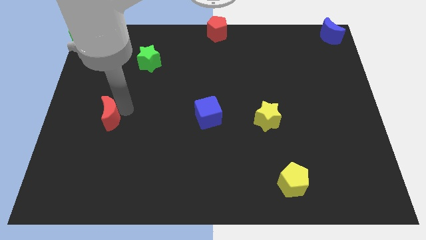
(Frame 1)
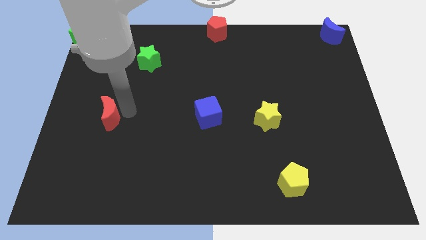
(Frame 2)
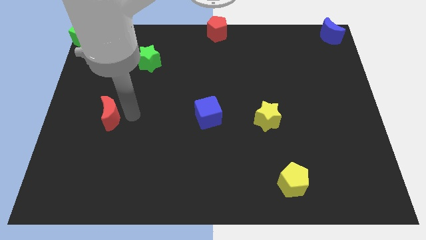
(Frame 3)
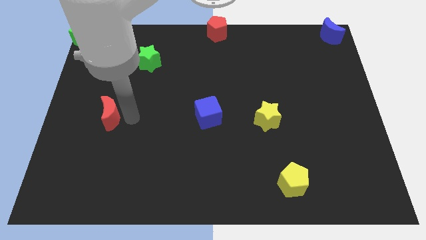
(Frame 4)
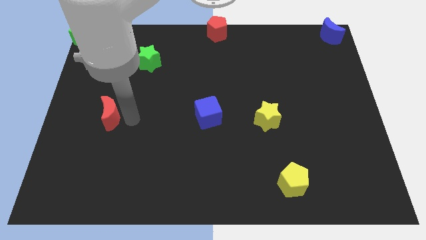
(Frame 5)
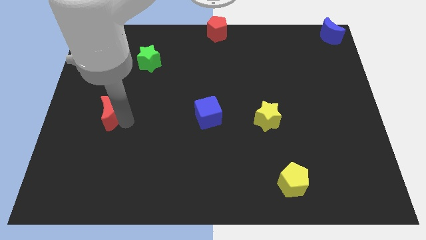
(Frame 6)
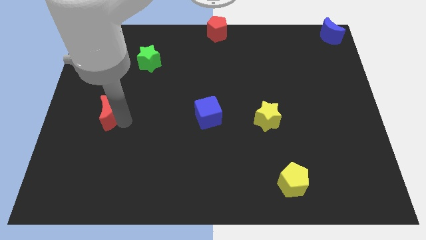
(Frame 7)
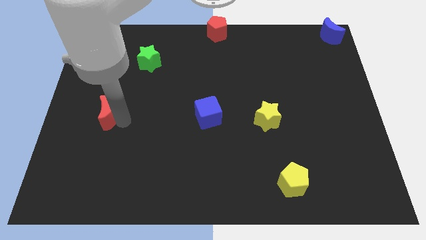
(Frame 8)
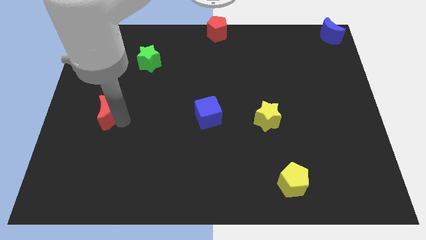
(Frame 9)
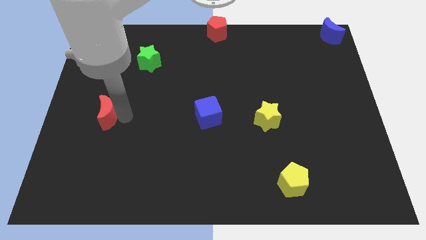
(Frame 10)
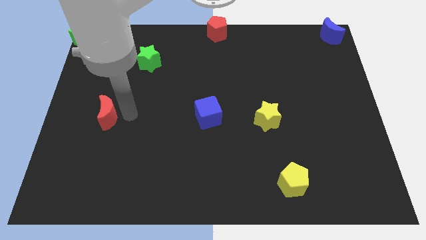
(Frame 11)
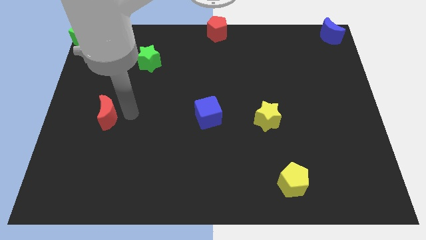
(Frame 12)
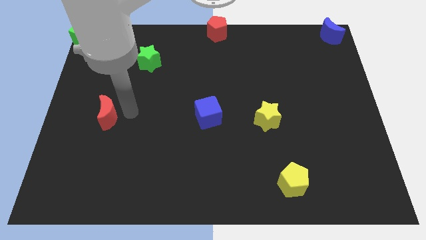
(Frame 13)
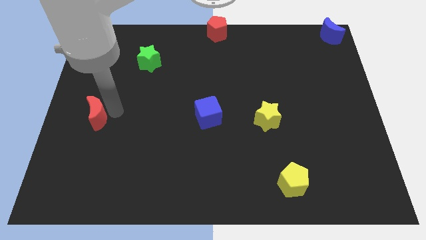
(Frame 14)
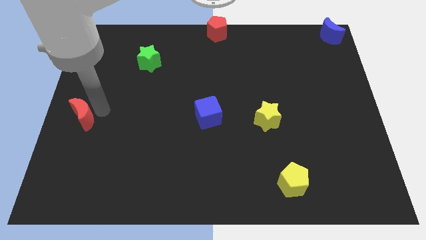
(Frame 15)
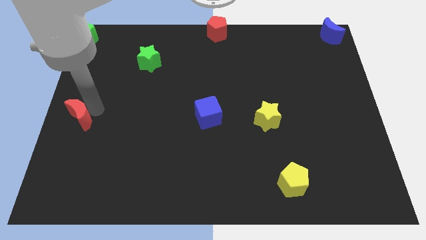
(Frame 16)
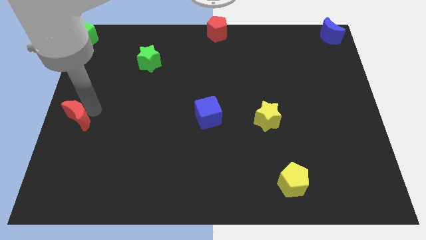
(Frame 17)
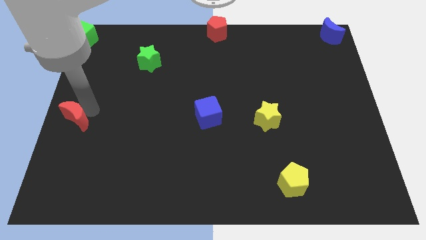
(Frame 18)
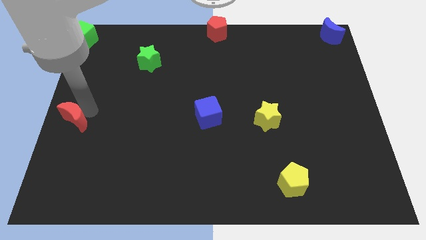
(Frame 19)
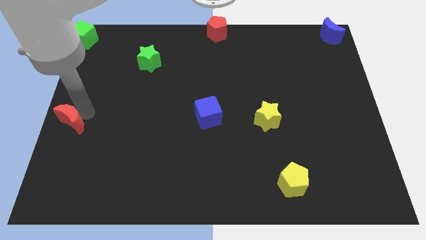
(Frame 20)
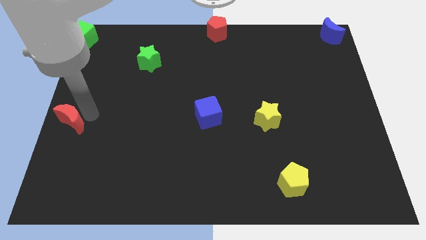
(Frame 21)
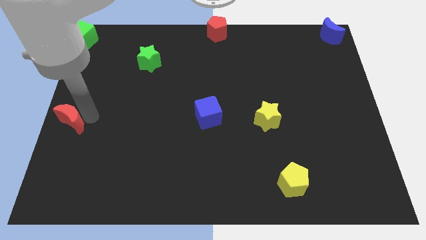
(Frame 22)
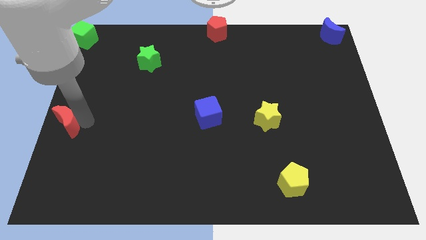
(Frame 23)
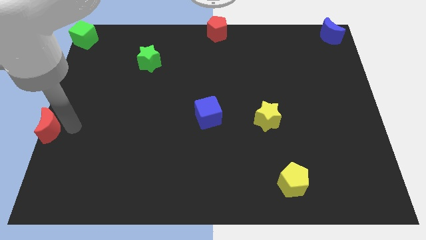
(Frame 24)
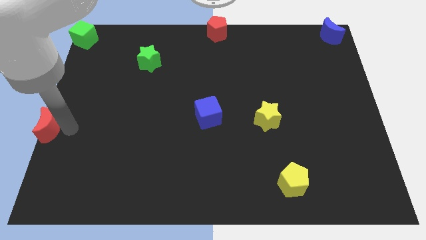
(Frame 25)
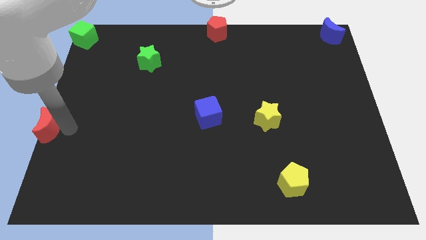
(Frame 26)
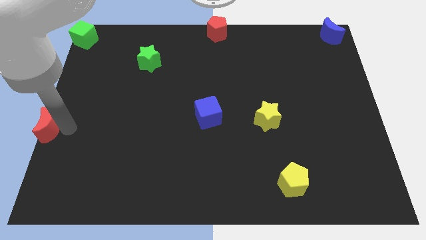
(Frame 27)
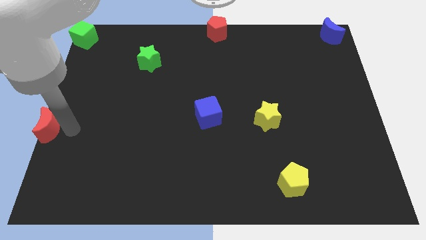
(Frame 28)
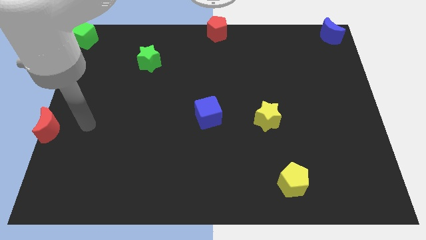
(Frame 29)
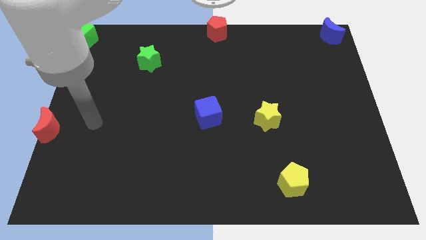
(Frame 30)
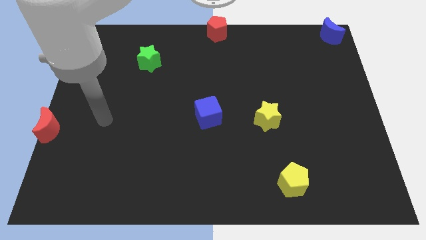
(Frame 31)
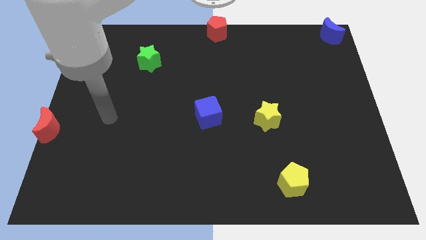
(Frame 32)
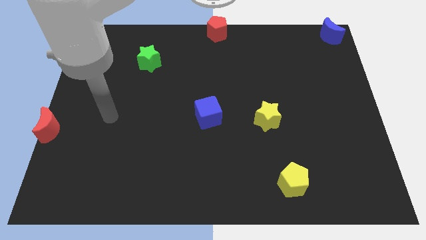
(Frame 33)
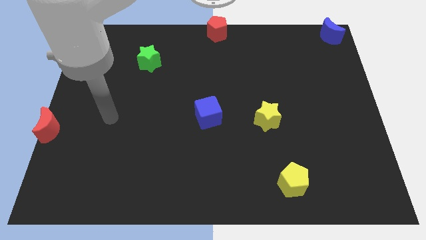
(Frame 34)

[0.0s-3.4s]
move red moon to the left center

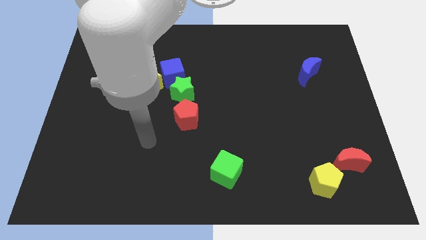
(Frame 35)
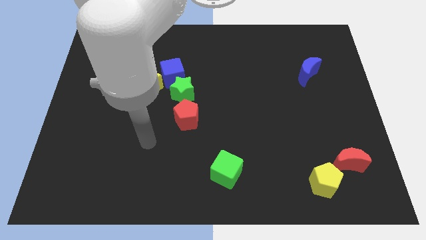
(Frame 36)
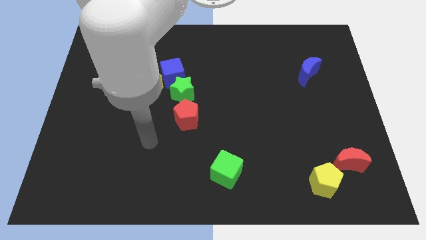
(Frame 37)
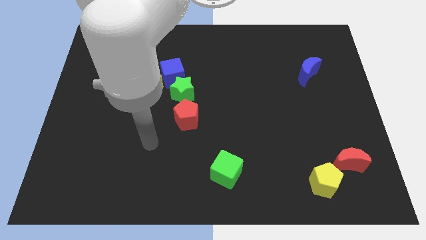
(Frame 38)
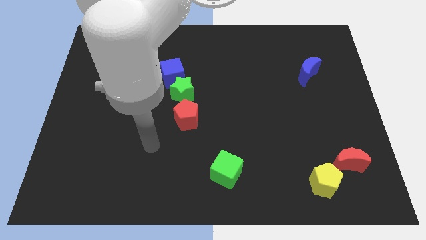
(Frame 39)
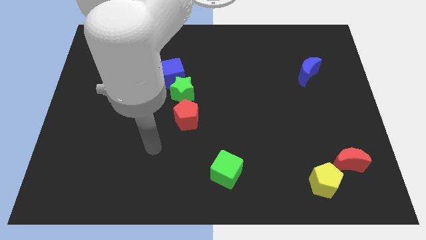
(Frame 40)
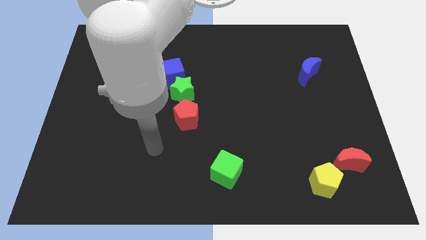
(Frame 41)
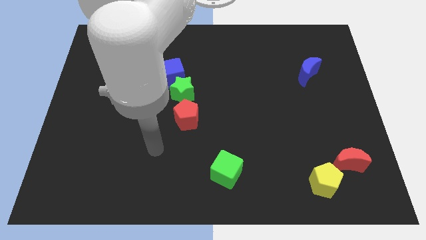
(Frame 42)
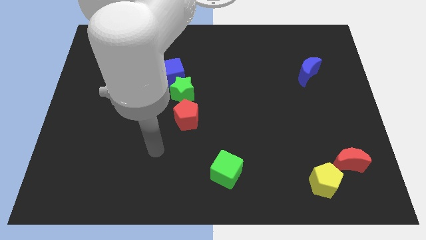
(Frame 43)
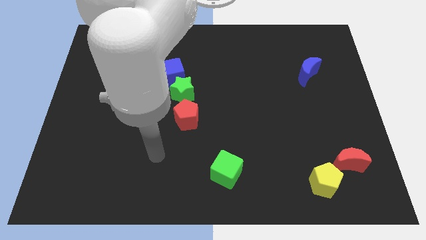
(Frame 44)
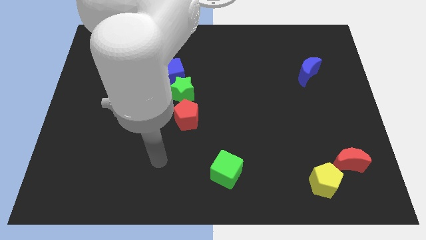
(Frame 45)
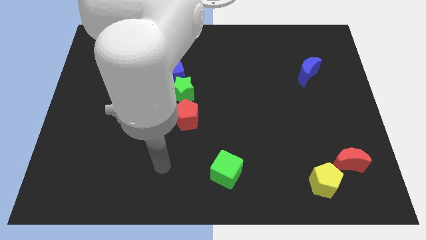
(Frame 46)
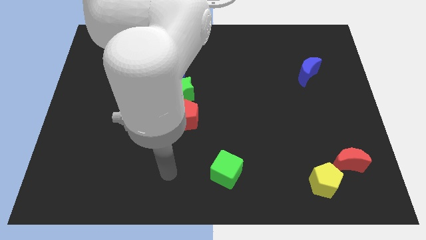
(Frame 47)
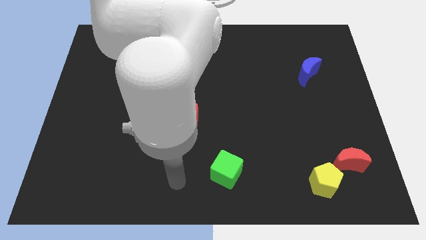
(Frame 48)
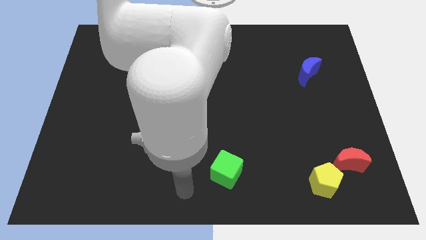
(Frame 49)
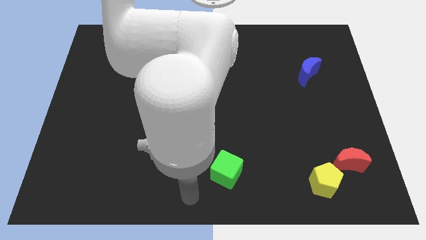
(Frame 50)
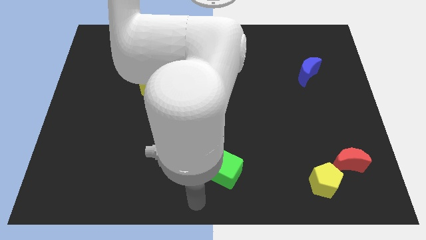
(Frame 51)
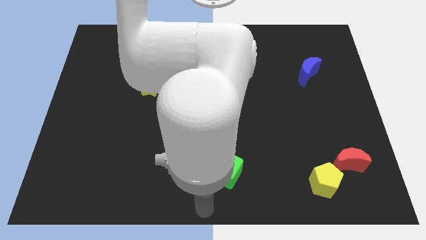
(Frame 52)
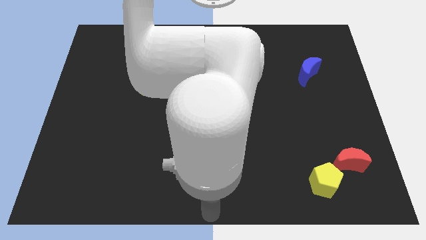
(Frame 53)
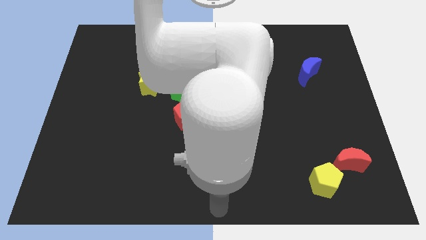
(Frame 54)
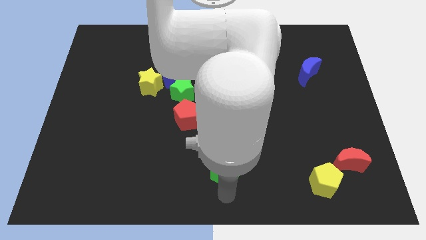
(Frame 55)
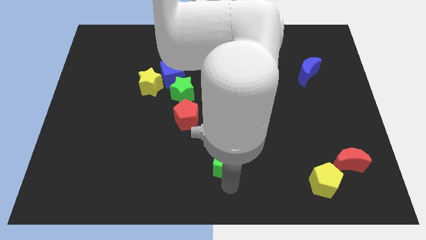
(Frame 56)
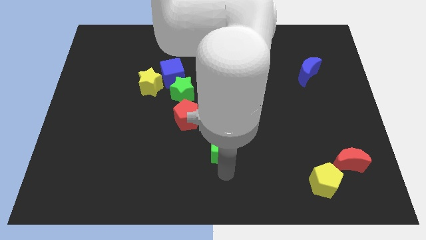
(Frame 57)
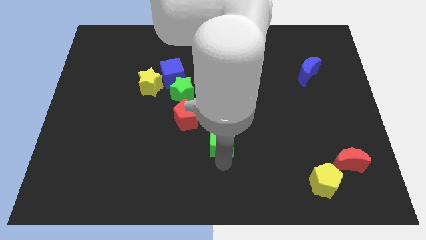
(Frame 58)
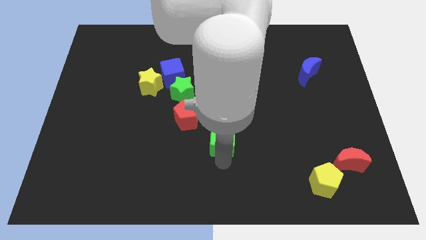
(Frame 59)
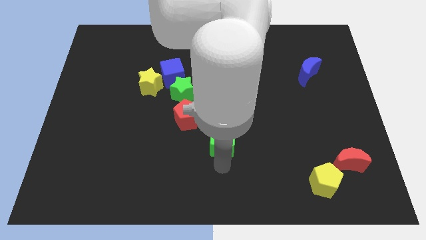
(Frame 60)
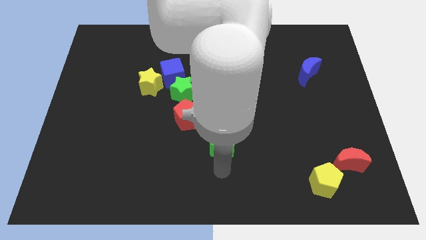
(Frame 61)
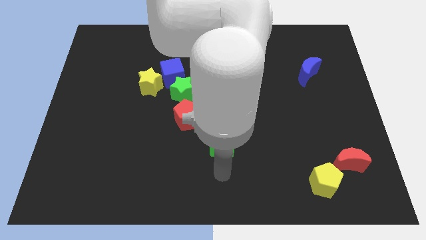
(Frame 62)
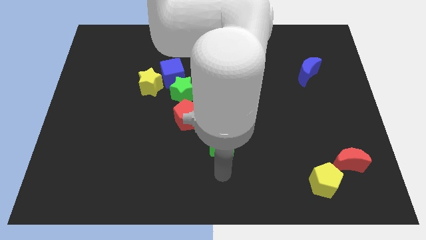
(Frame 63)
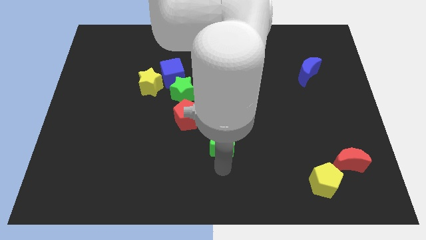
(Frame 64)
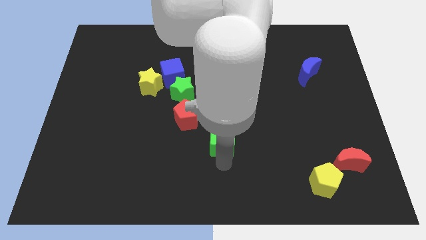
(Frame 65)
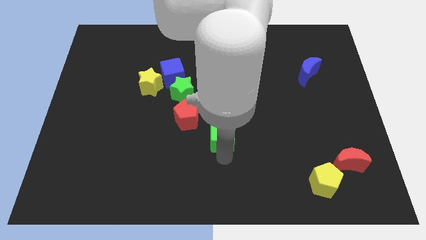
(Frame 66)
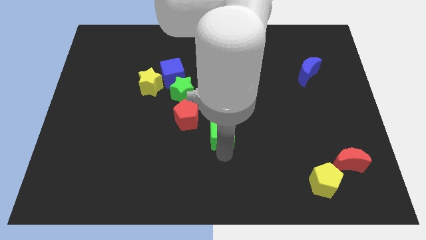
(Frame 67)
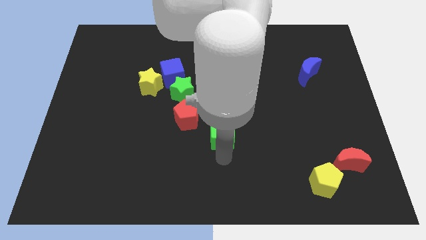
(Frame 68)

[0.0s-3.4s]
move the green cube in between the red pentagon and yellow pentagon

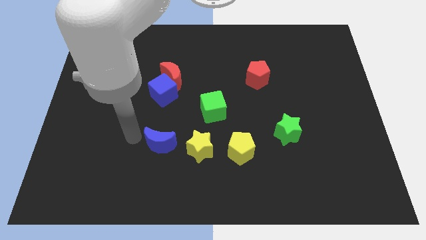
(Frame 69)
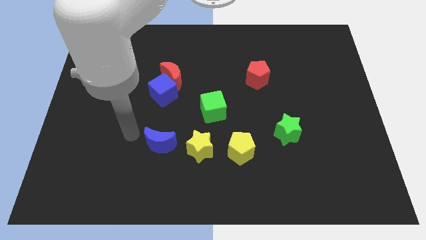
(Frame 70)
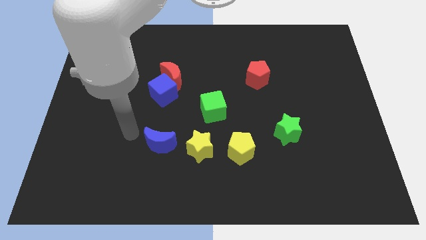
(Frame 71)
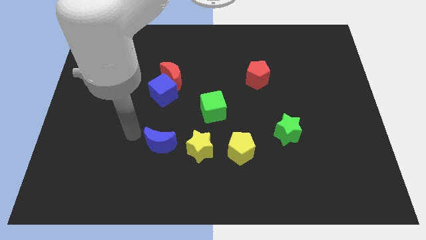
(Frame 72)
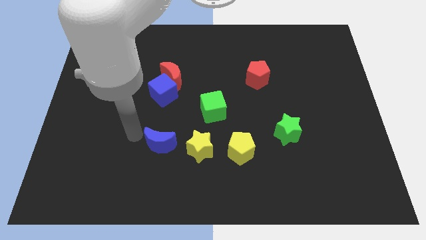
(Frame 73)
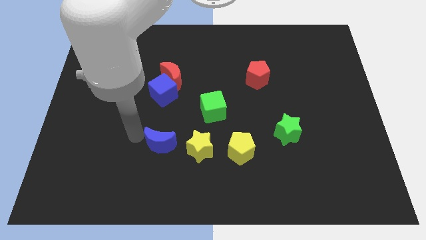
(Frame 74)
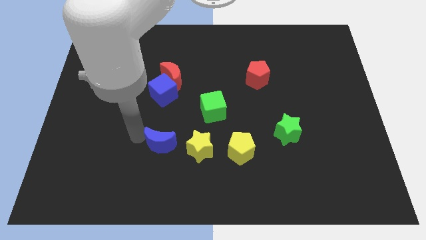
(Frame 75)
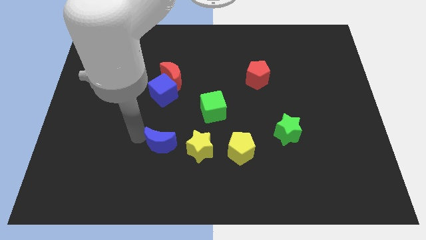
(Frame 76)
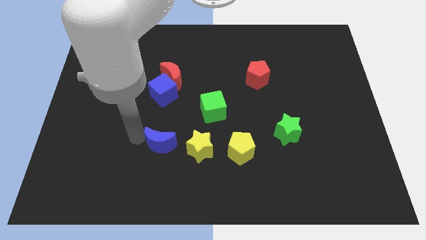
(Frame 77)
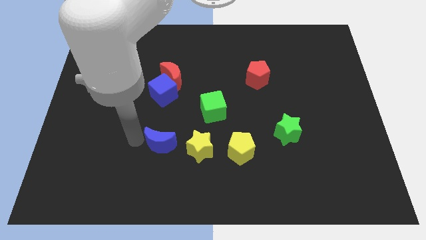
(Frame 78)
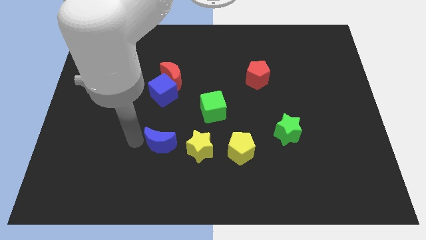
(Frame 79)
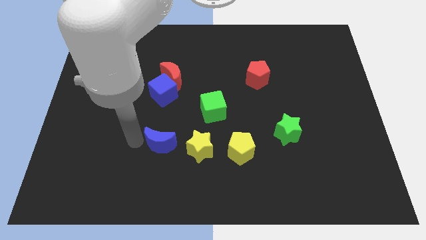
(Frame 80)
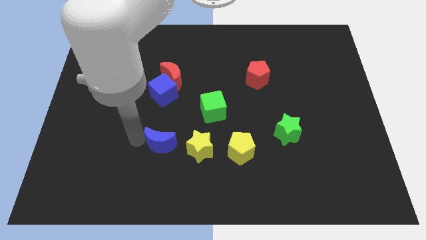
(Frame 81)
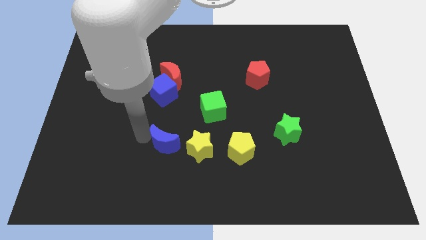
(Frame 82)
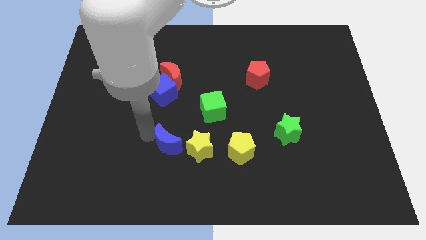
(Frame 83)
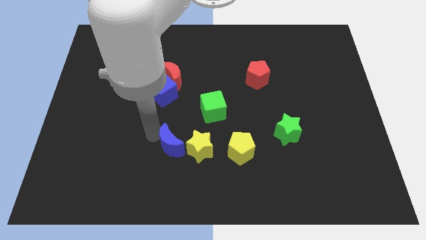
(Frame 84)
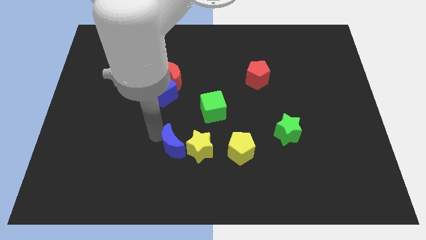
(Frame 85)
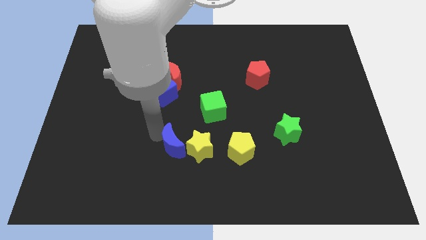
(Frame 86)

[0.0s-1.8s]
push the blue crescent into the yellow star

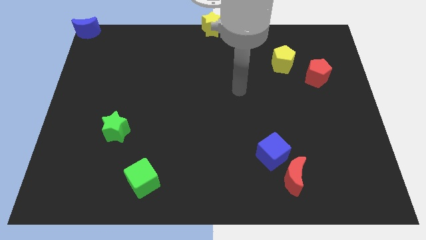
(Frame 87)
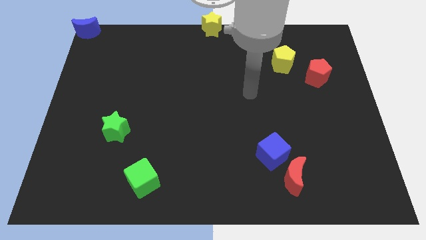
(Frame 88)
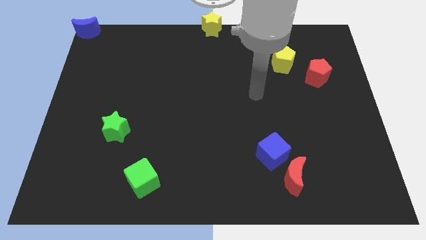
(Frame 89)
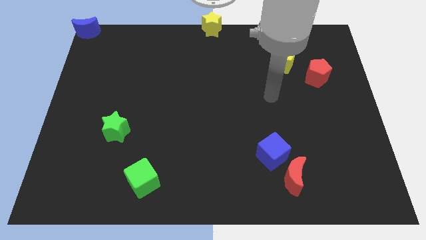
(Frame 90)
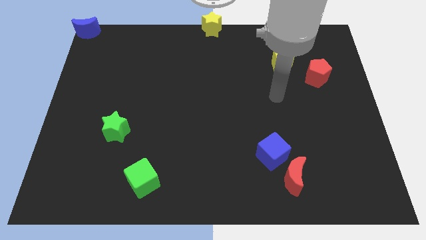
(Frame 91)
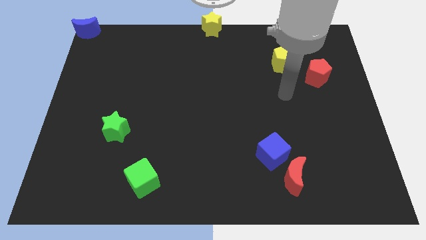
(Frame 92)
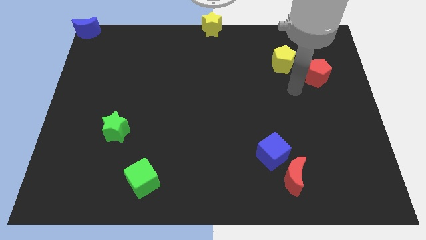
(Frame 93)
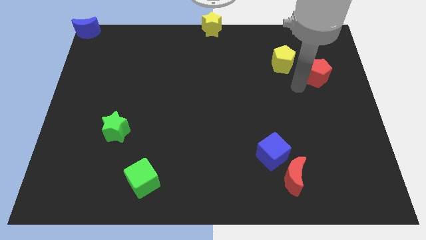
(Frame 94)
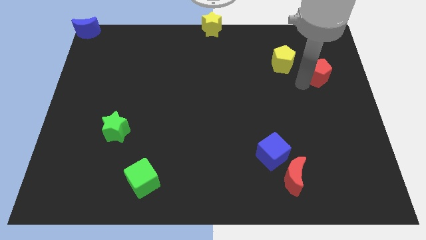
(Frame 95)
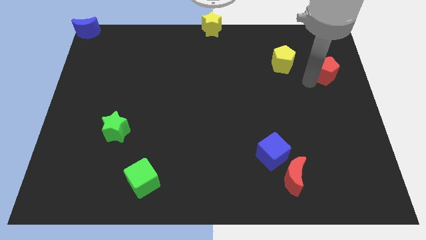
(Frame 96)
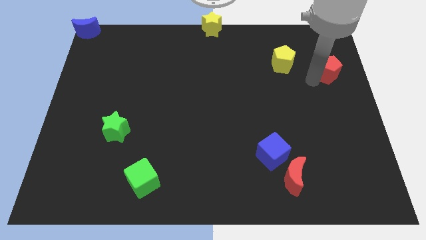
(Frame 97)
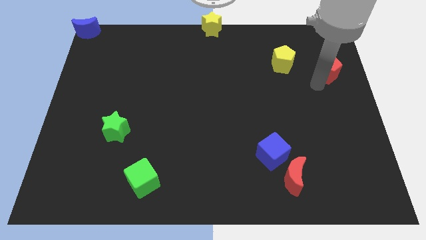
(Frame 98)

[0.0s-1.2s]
slightly push the red pentagon towards the right side
